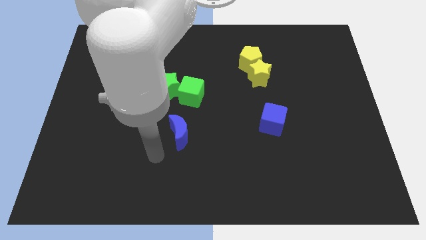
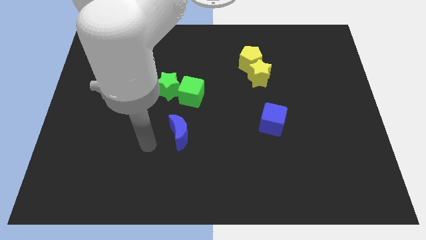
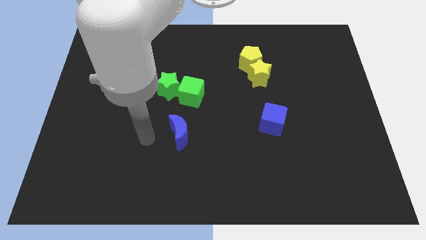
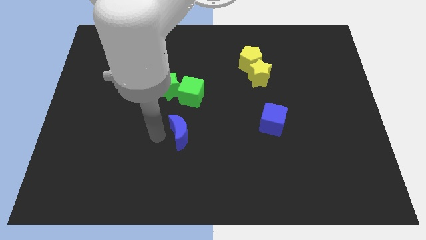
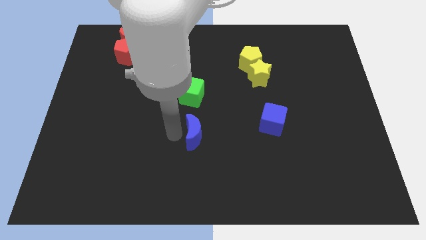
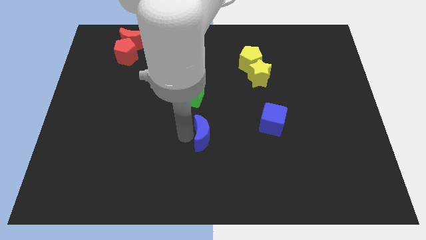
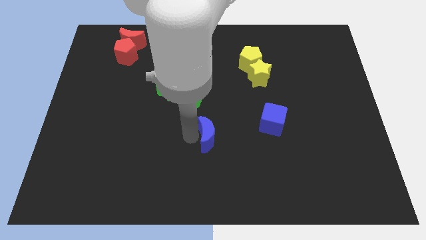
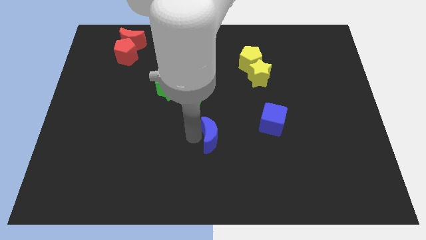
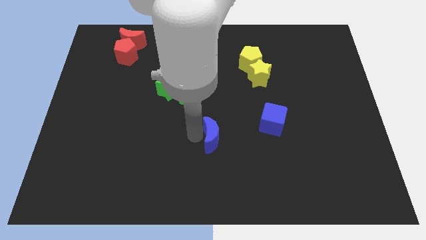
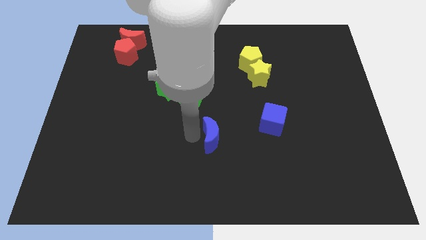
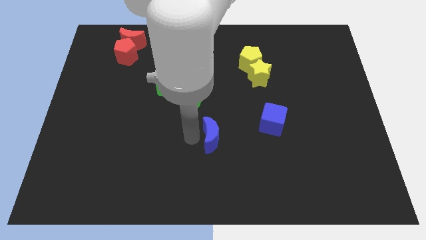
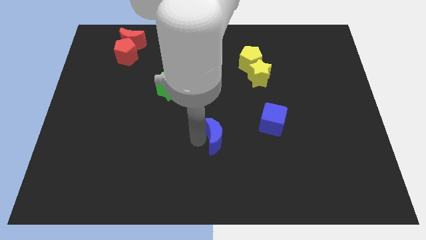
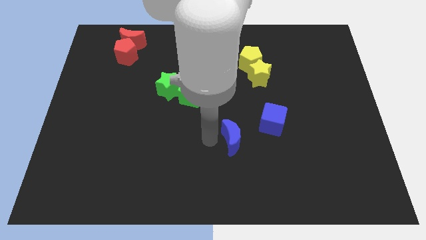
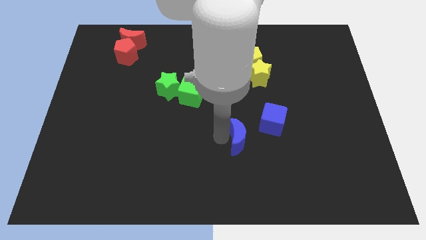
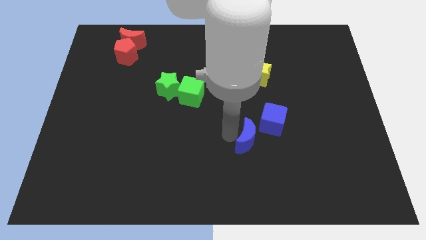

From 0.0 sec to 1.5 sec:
move the blue moon towards the right

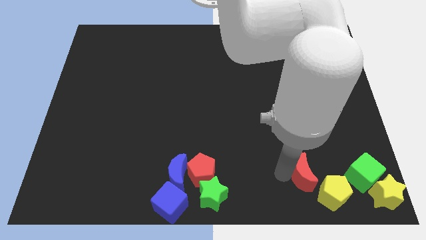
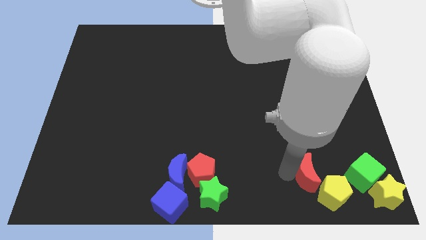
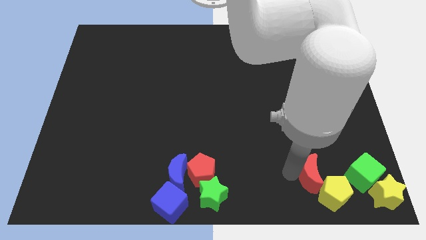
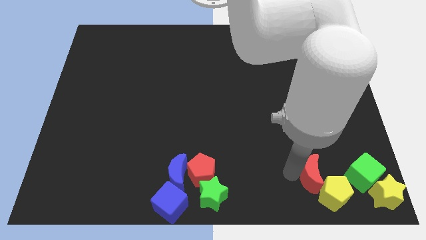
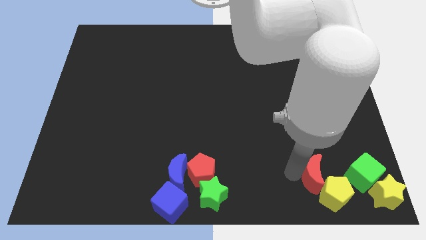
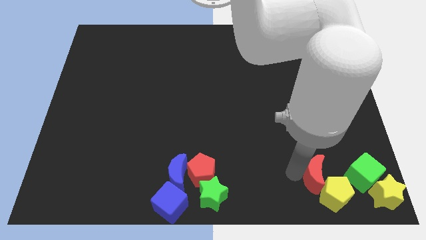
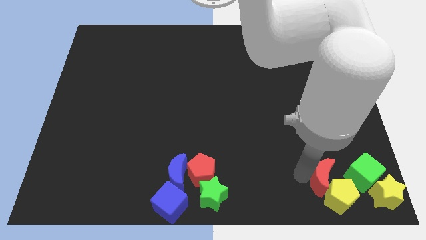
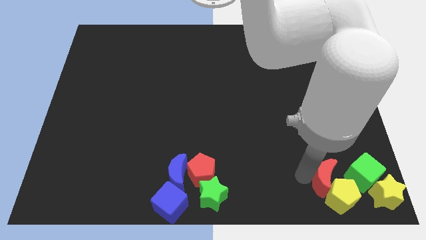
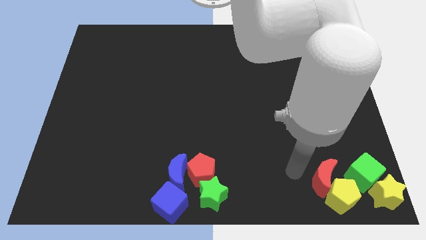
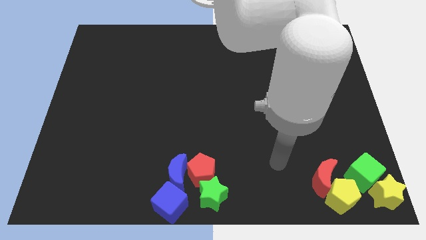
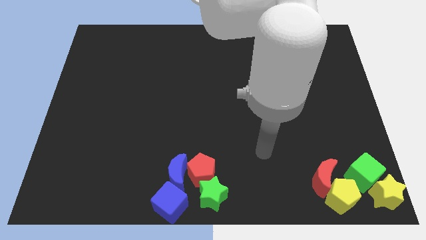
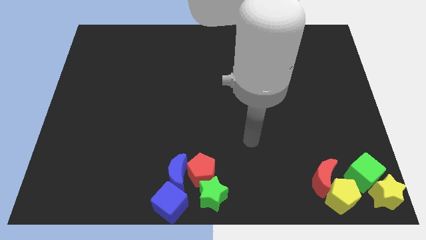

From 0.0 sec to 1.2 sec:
move the red moon to the top of the yellow pentagon

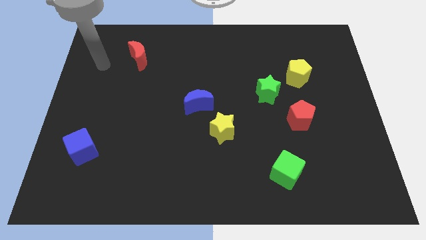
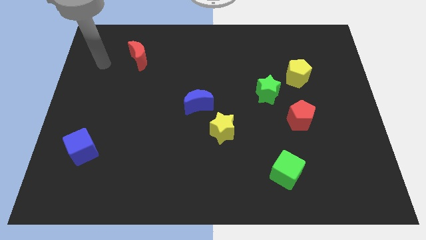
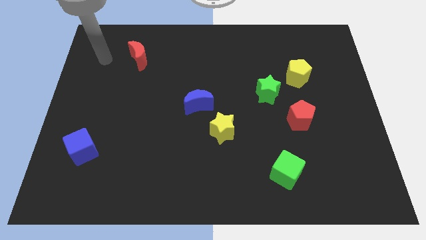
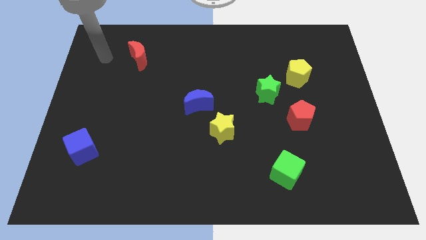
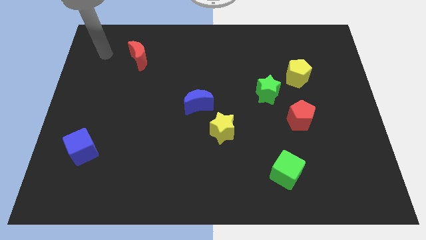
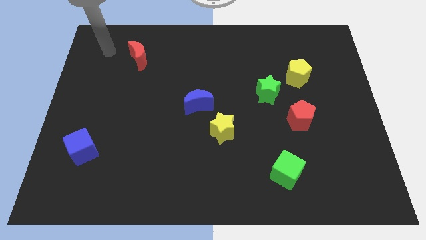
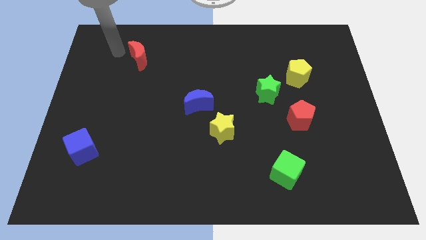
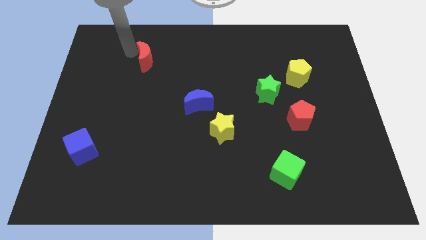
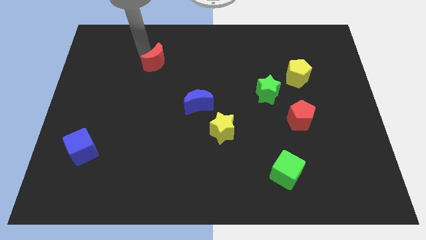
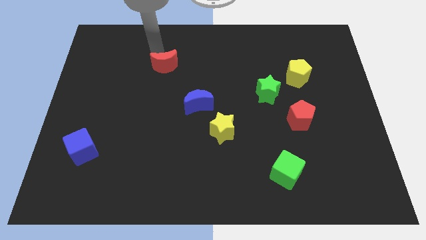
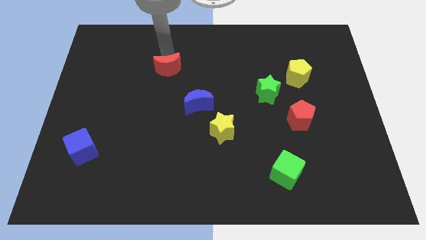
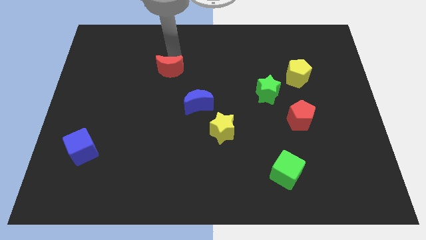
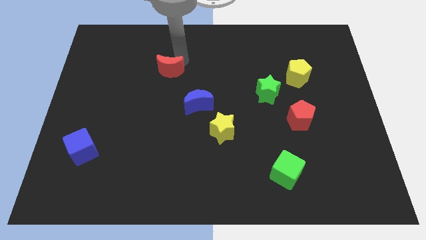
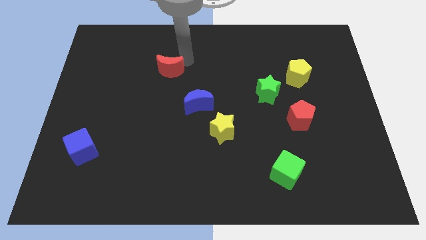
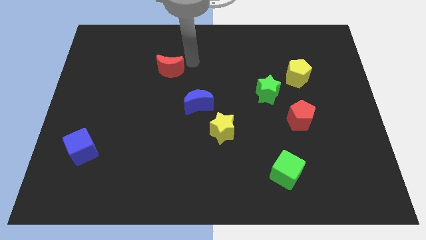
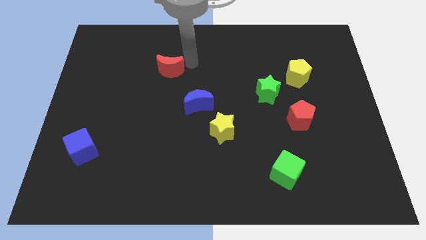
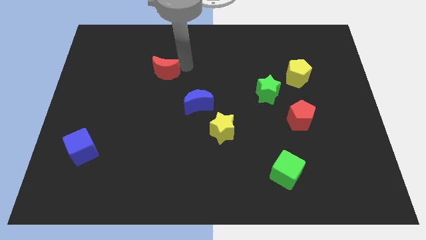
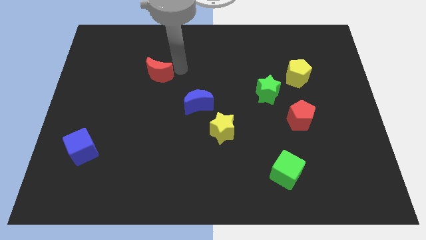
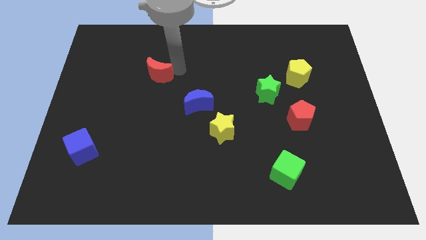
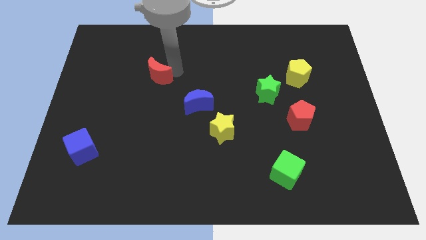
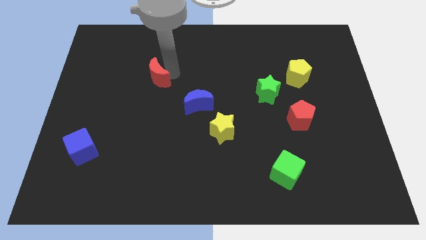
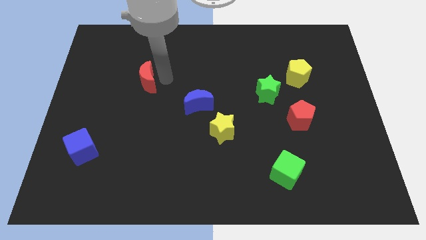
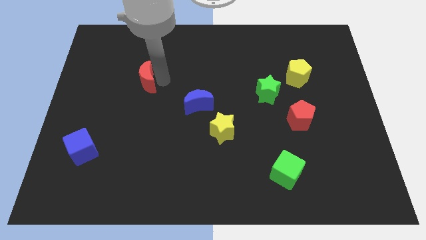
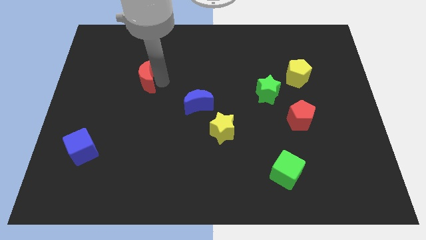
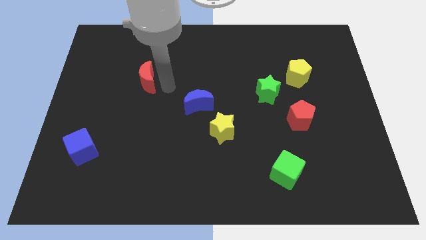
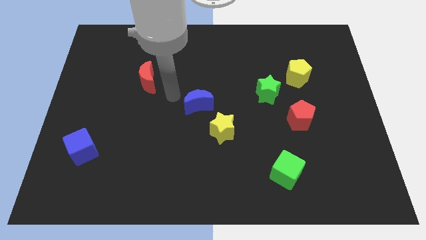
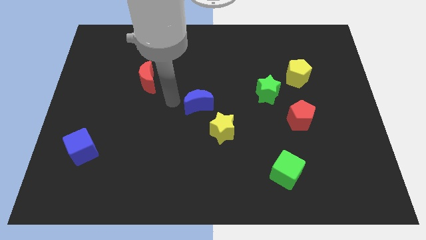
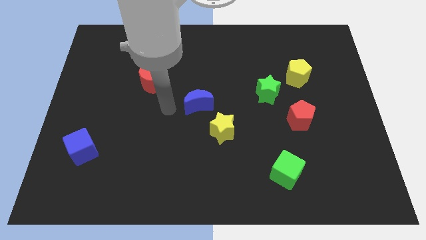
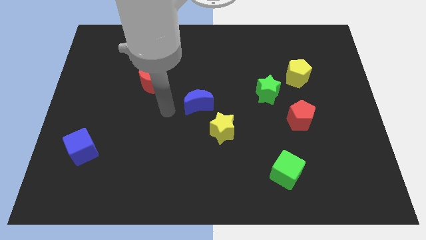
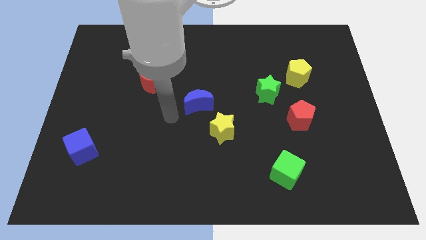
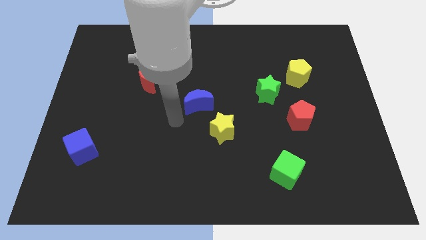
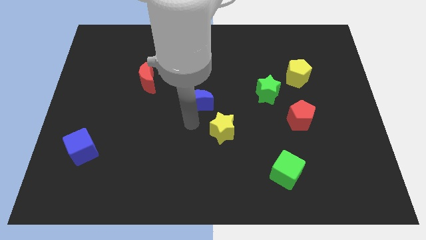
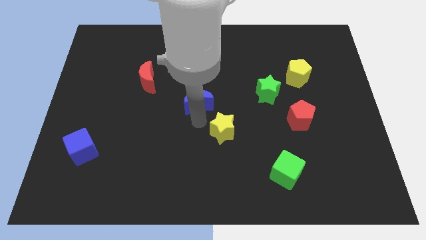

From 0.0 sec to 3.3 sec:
place the red moon diagonally top left to the blue moon

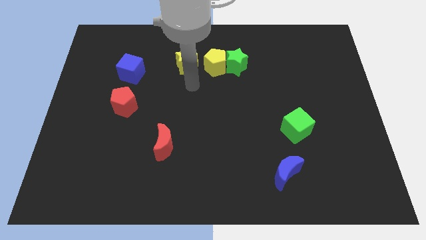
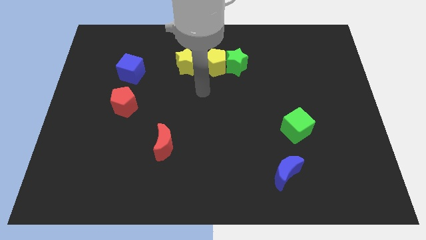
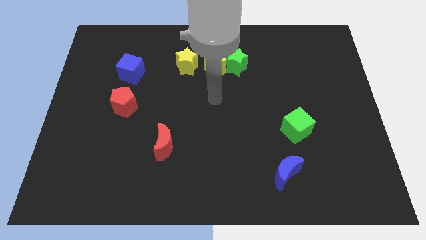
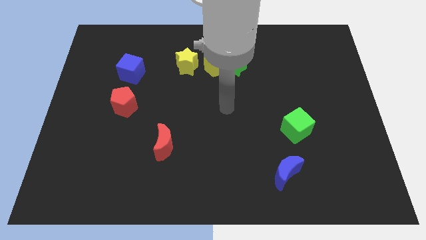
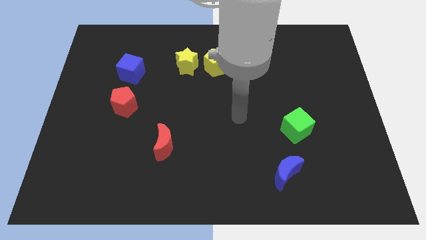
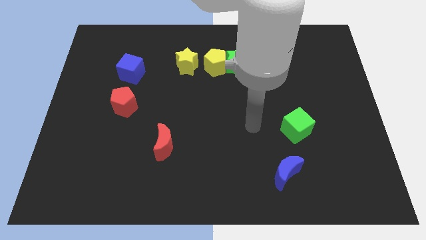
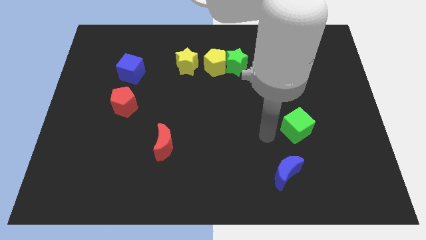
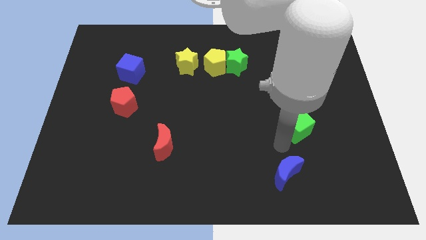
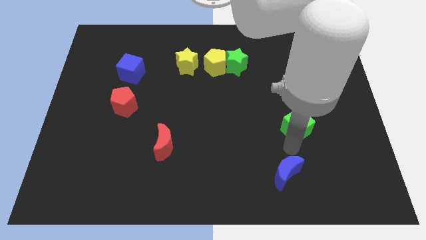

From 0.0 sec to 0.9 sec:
move your arm away from the yellow star

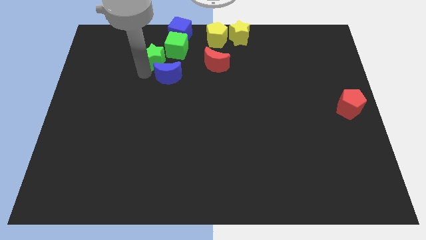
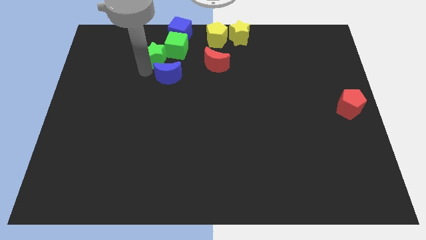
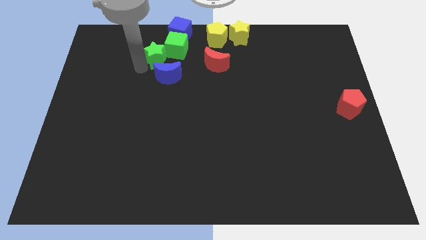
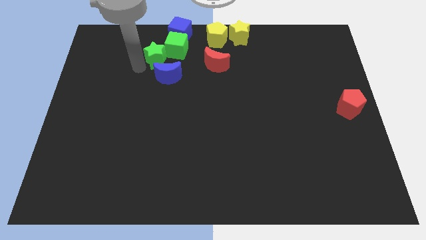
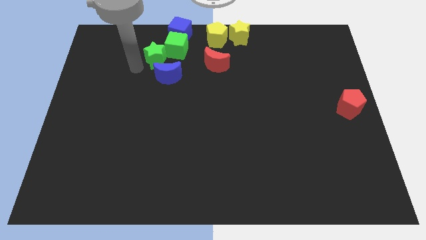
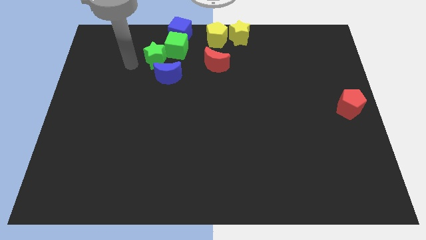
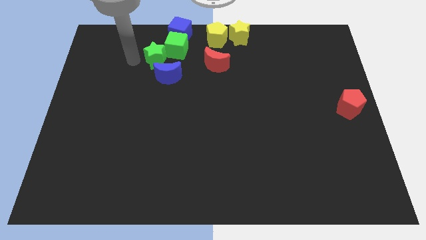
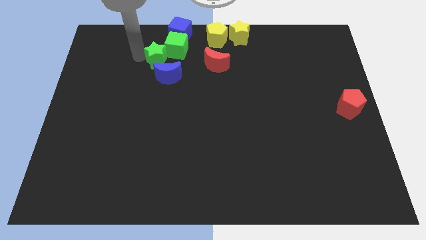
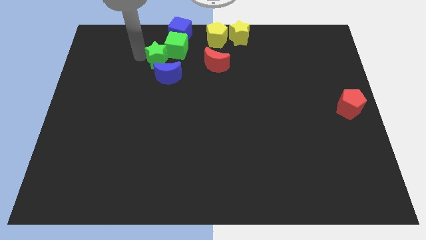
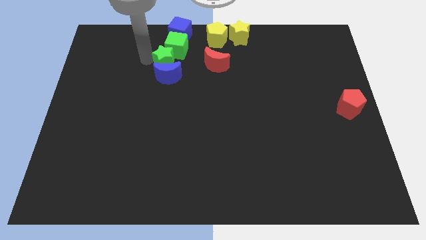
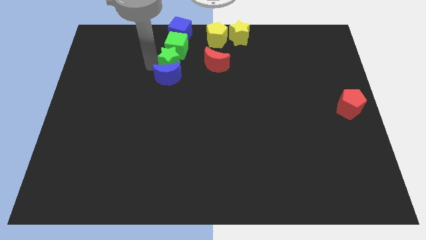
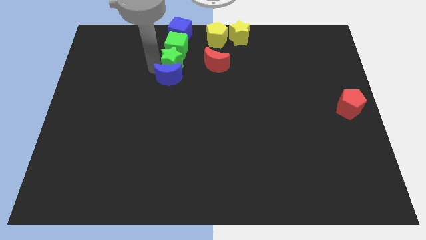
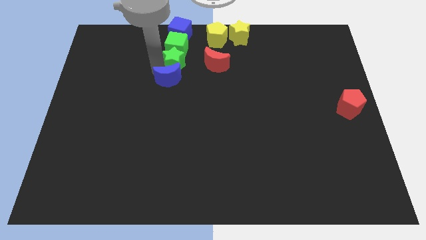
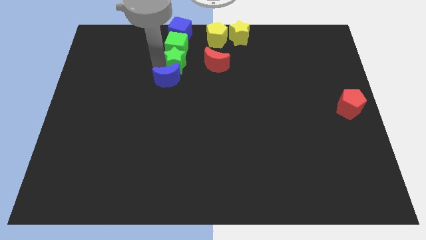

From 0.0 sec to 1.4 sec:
place the green star between the green cube and blue moon

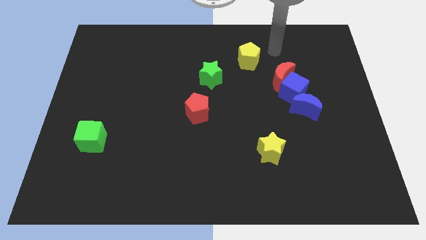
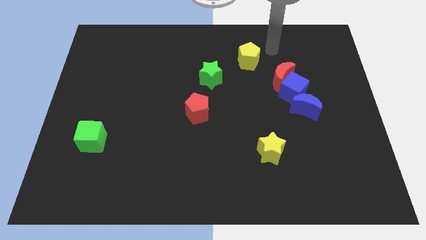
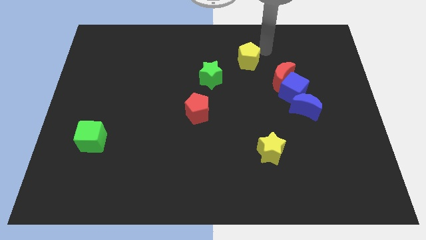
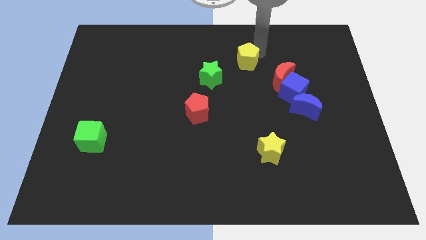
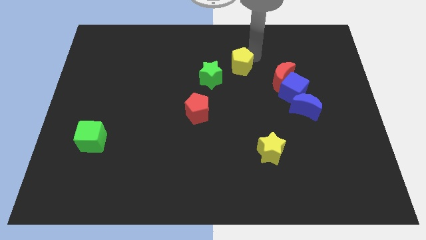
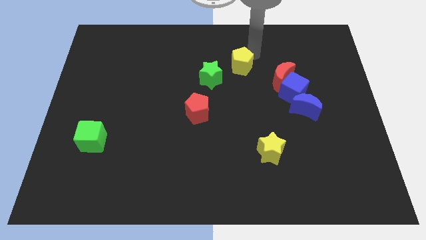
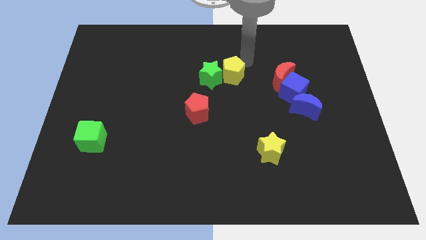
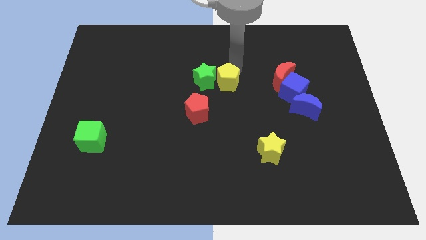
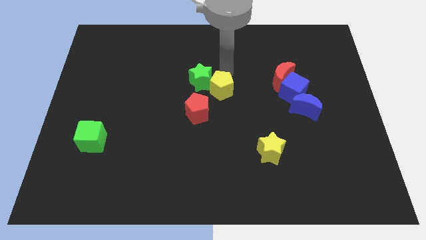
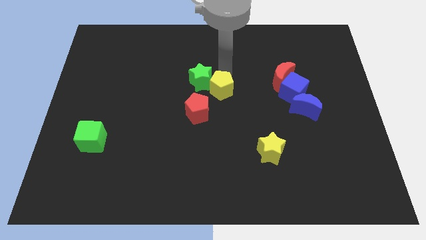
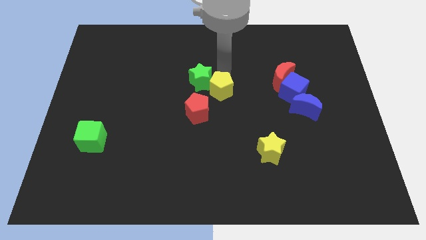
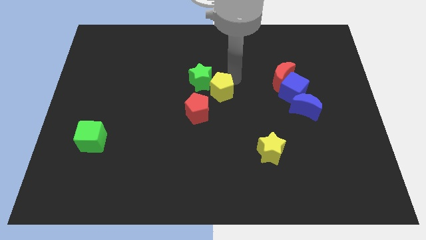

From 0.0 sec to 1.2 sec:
push the yellow pentagon to the right of the green star
